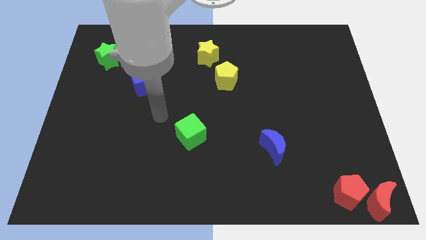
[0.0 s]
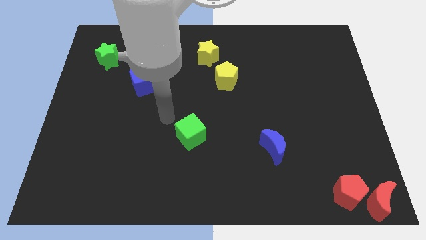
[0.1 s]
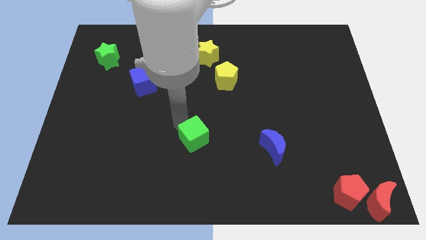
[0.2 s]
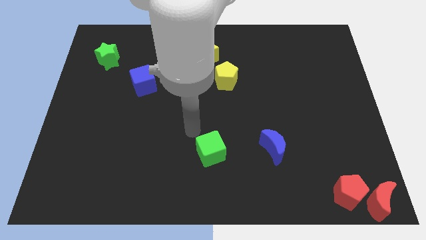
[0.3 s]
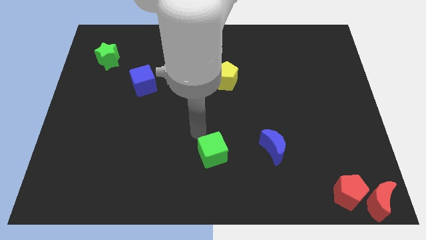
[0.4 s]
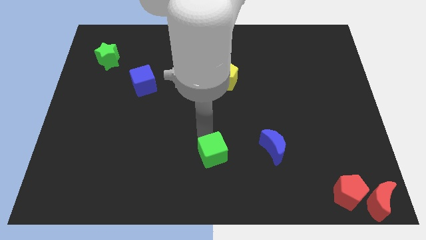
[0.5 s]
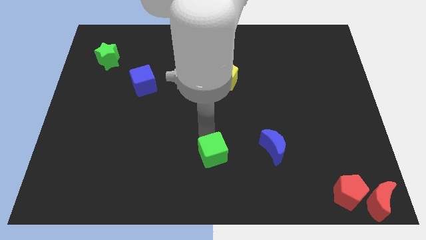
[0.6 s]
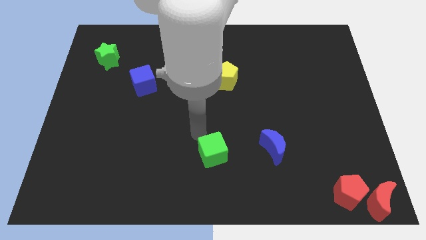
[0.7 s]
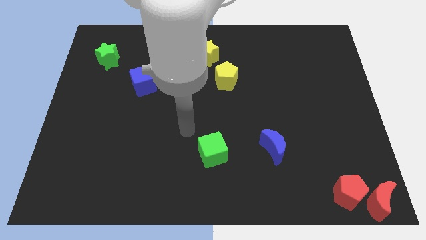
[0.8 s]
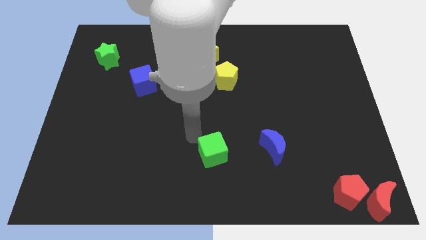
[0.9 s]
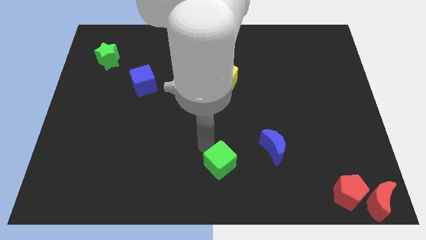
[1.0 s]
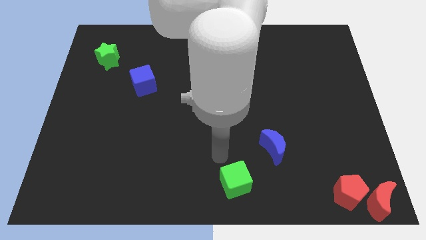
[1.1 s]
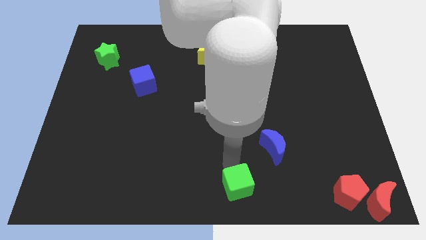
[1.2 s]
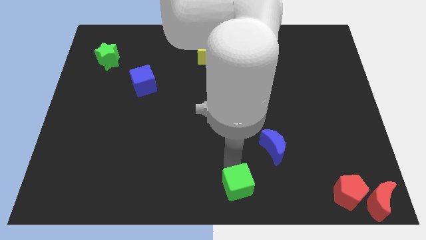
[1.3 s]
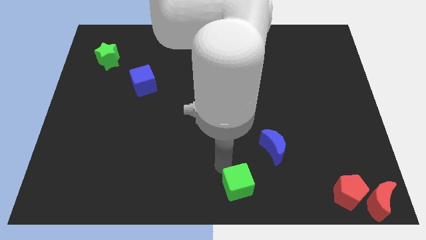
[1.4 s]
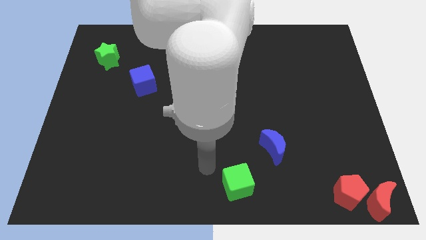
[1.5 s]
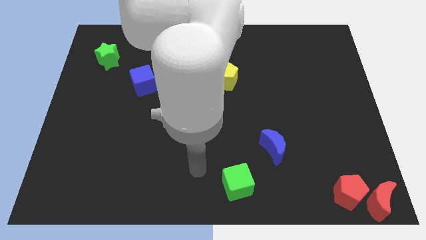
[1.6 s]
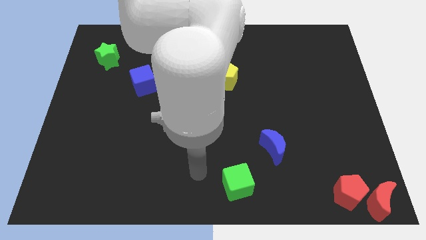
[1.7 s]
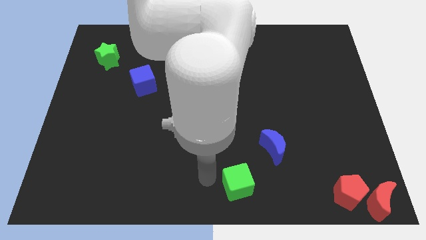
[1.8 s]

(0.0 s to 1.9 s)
push green cube towards bottom center

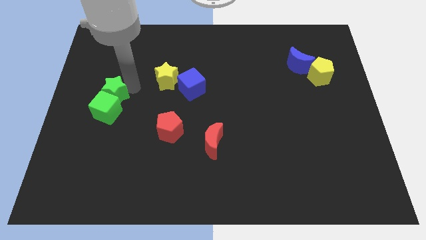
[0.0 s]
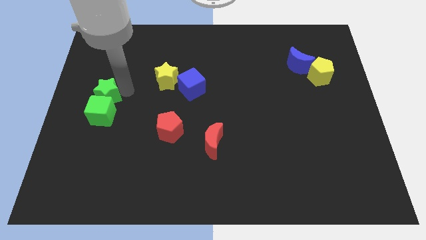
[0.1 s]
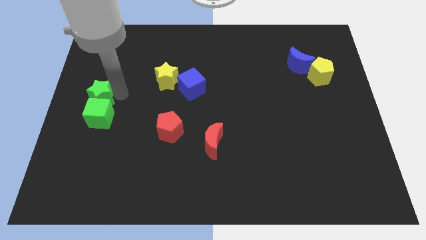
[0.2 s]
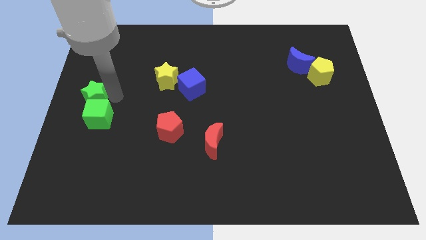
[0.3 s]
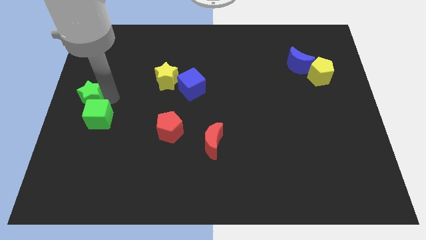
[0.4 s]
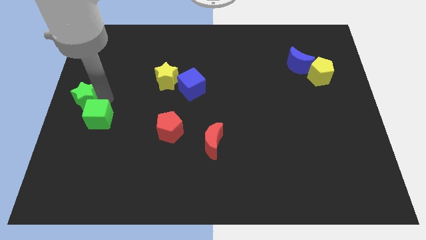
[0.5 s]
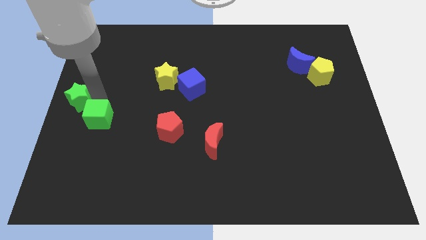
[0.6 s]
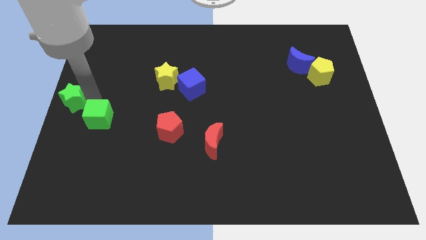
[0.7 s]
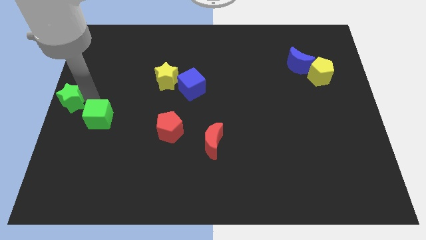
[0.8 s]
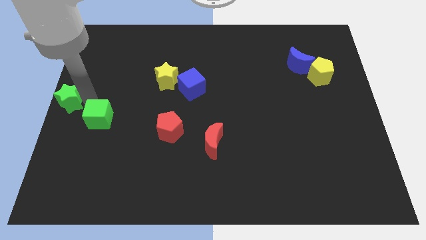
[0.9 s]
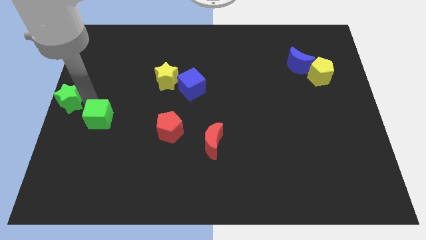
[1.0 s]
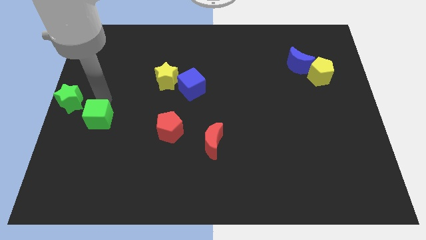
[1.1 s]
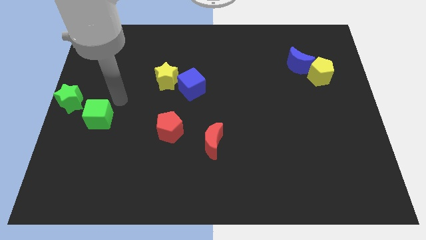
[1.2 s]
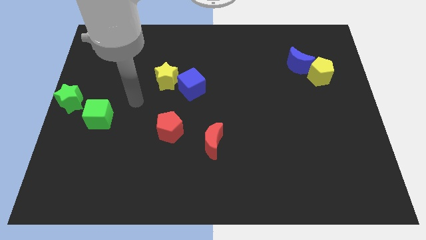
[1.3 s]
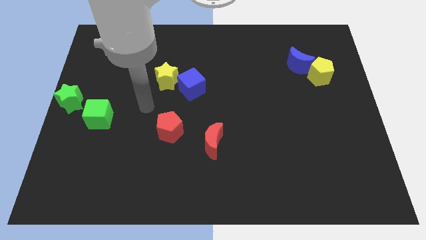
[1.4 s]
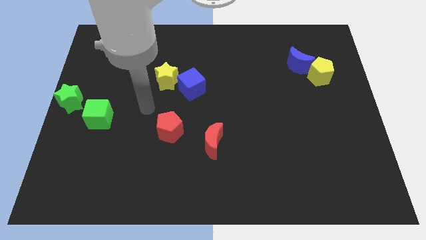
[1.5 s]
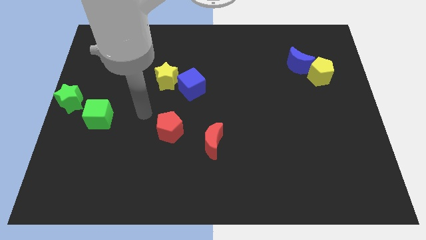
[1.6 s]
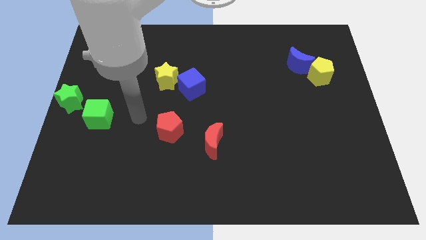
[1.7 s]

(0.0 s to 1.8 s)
move the green star to the center left

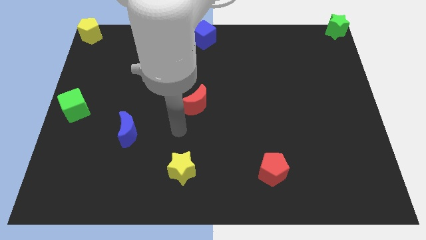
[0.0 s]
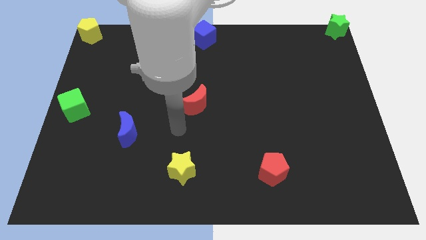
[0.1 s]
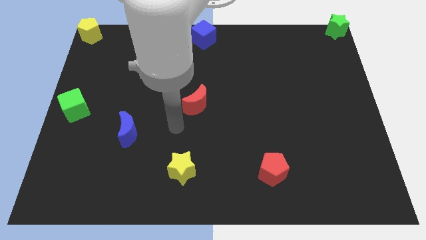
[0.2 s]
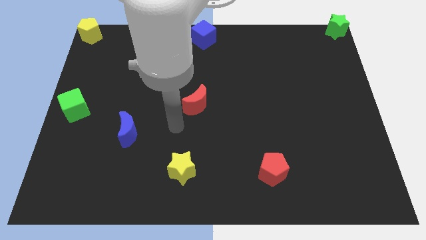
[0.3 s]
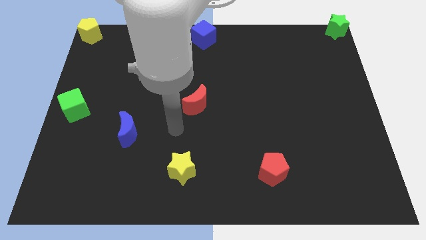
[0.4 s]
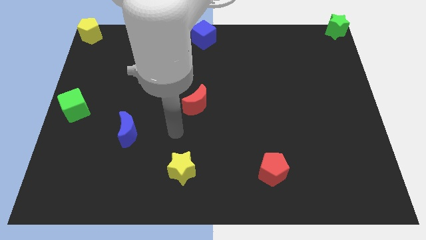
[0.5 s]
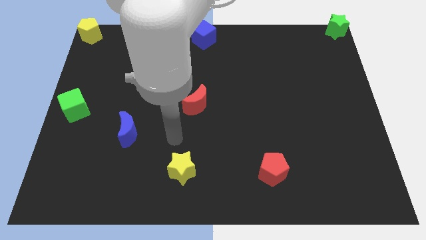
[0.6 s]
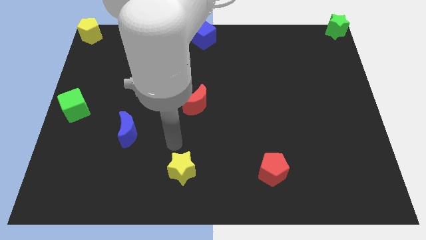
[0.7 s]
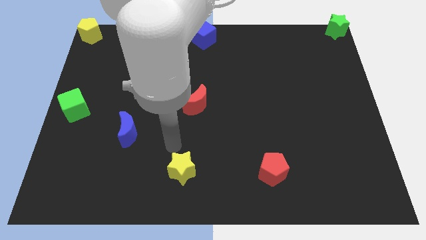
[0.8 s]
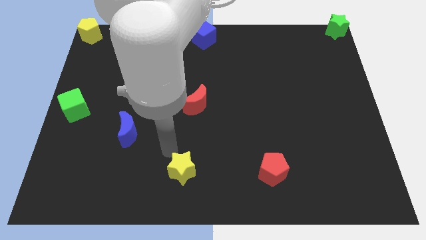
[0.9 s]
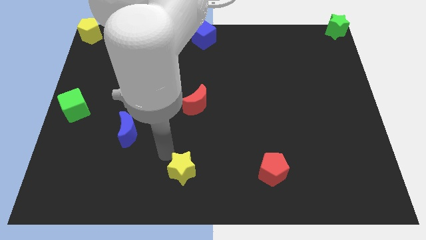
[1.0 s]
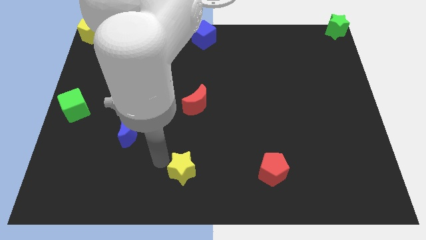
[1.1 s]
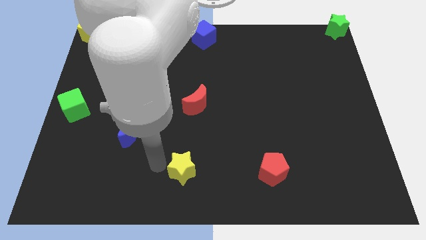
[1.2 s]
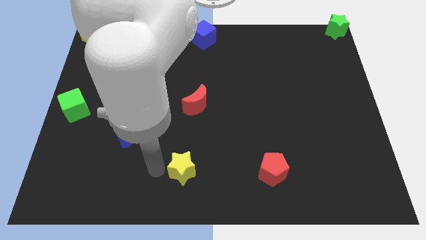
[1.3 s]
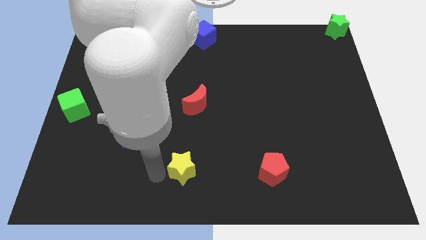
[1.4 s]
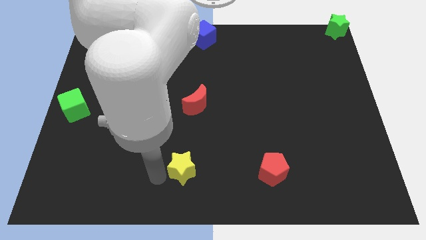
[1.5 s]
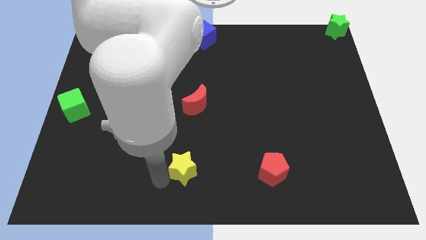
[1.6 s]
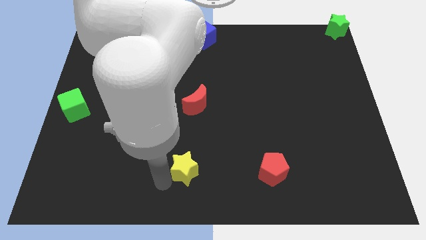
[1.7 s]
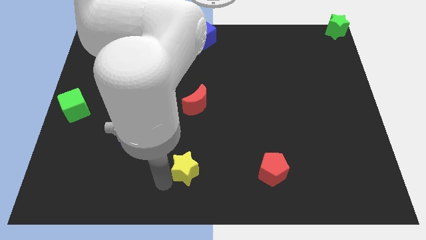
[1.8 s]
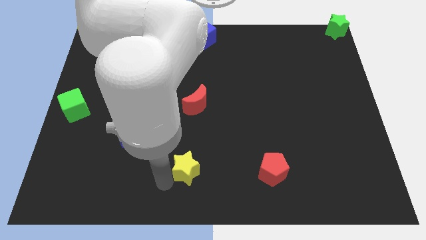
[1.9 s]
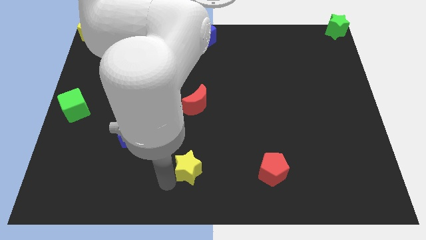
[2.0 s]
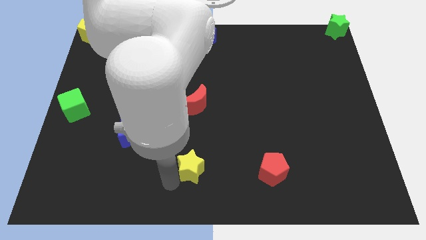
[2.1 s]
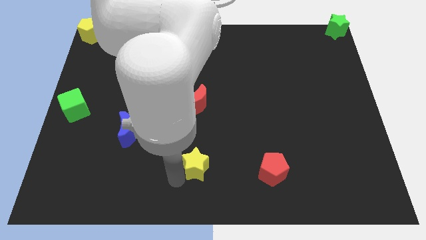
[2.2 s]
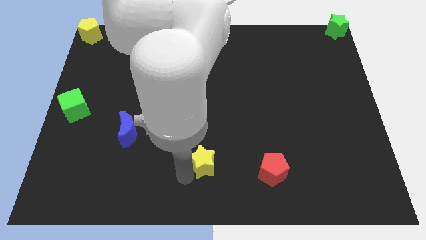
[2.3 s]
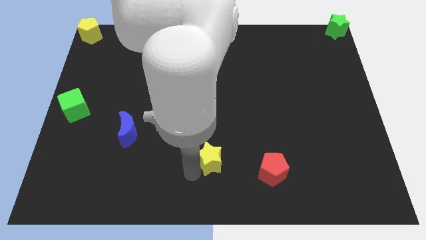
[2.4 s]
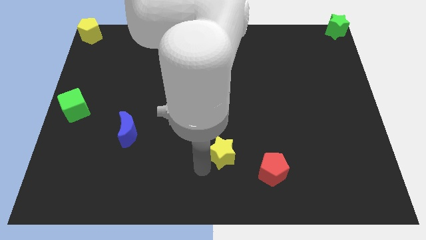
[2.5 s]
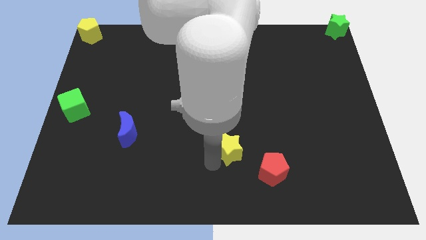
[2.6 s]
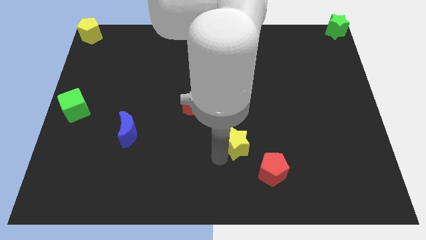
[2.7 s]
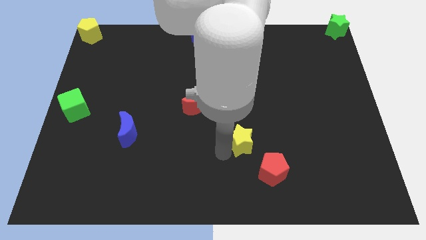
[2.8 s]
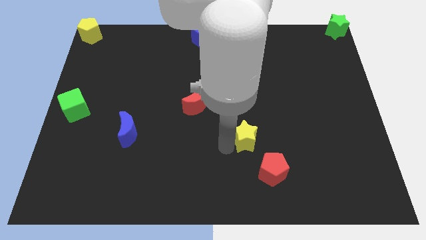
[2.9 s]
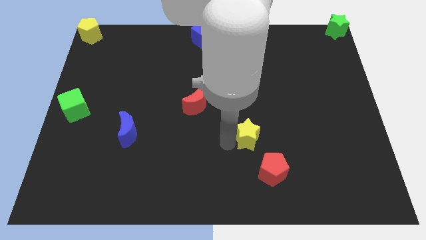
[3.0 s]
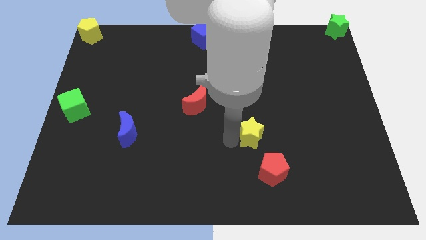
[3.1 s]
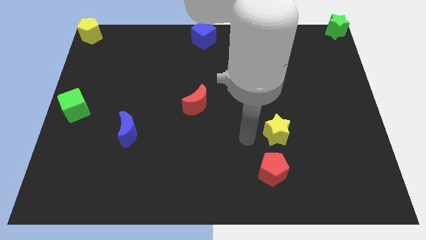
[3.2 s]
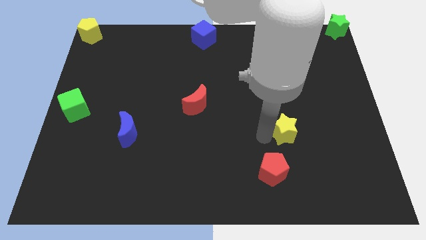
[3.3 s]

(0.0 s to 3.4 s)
slide the yellow star diagonally bottom right to the red moon

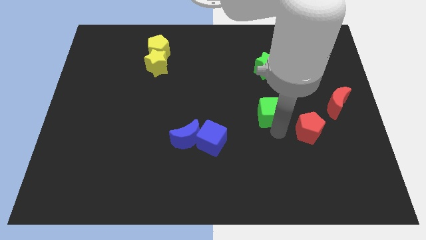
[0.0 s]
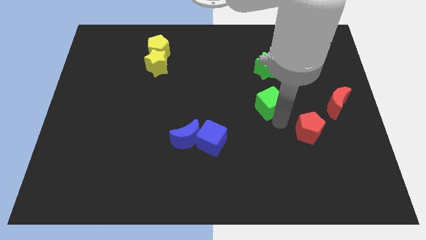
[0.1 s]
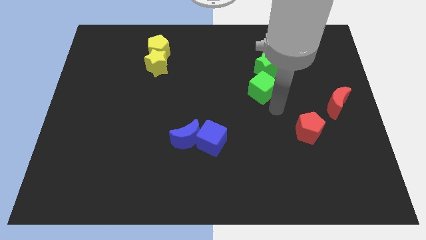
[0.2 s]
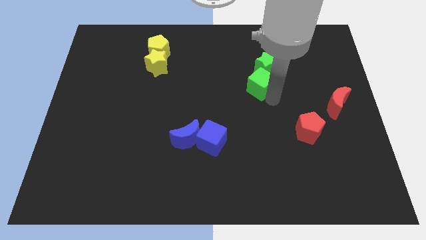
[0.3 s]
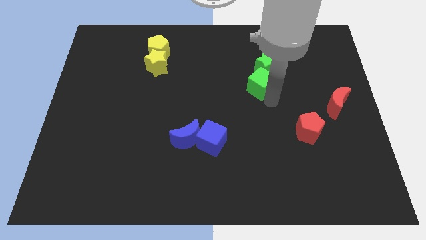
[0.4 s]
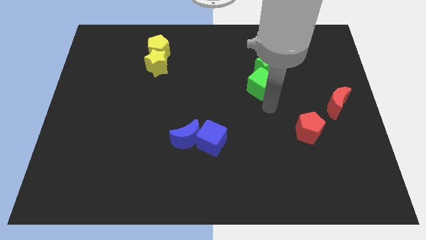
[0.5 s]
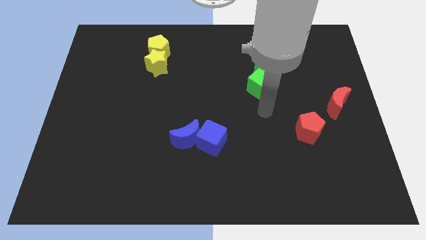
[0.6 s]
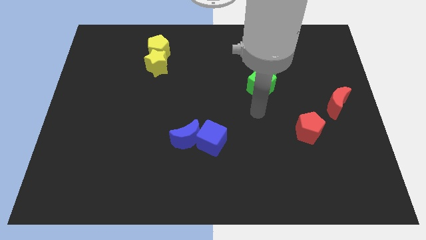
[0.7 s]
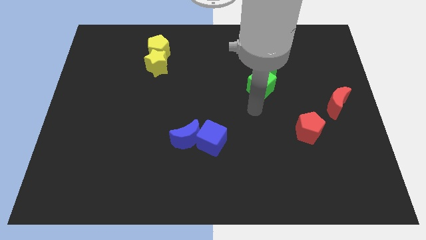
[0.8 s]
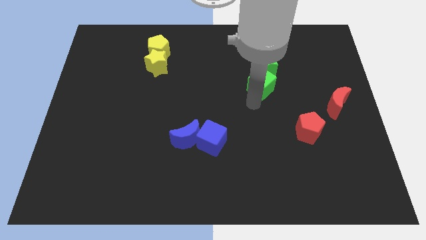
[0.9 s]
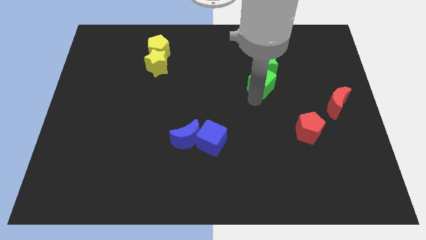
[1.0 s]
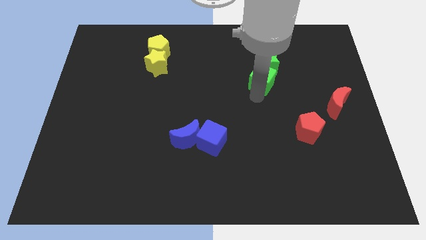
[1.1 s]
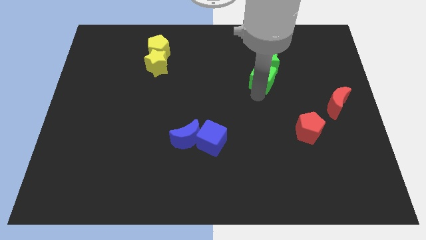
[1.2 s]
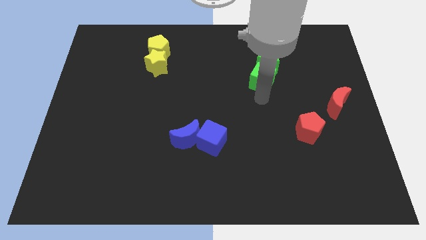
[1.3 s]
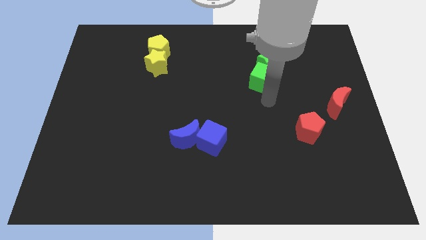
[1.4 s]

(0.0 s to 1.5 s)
move green cube close to the green star

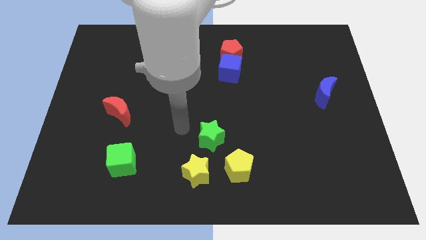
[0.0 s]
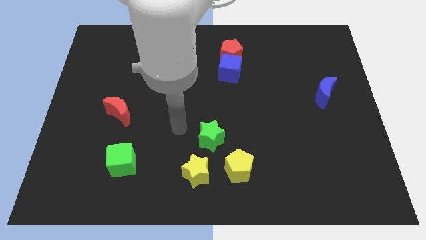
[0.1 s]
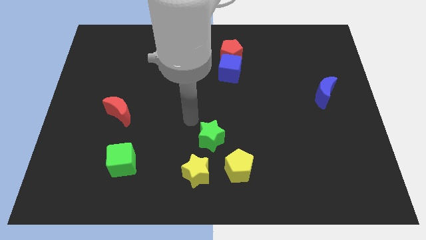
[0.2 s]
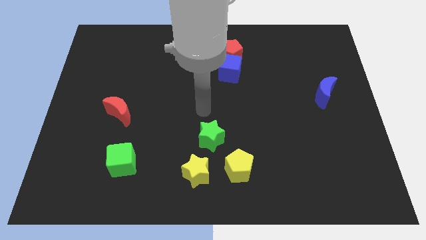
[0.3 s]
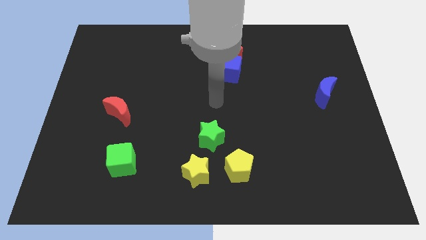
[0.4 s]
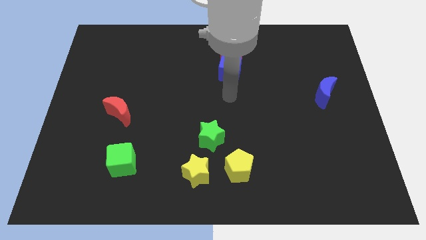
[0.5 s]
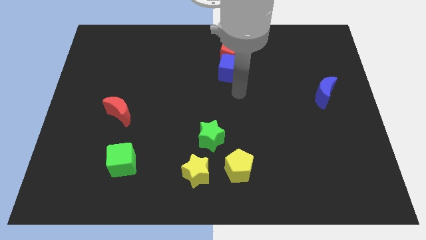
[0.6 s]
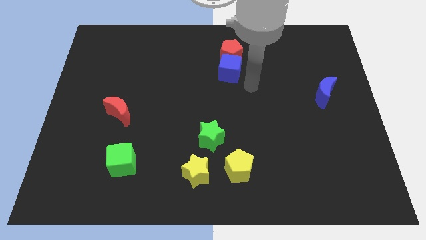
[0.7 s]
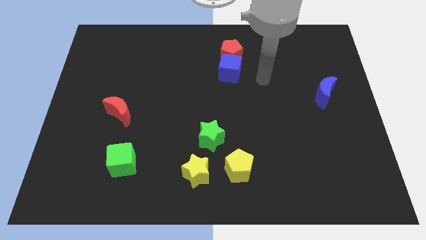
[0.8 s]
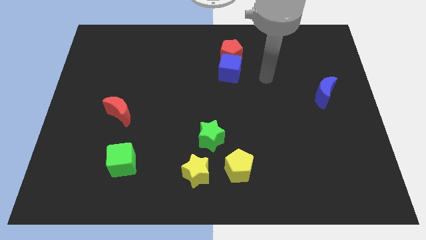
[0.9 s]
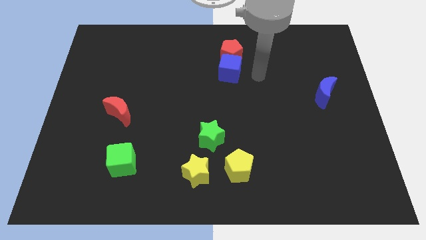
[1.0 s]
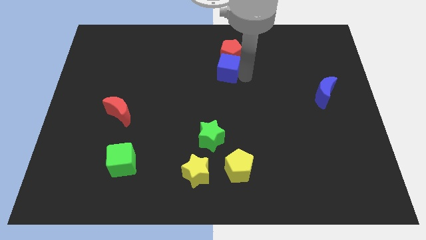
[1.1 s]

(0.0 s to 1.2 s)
point your arm to the right of the blue cube
